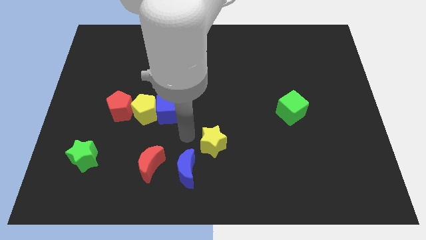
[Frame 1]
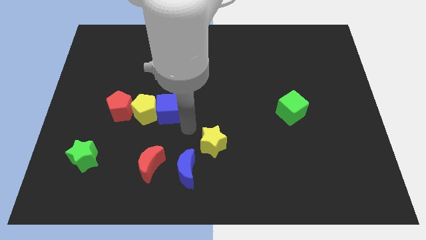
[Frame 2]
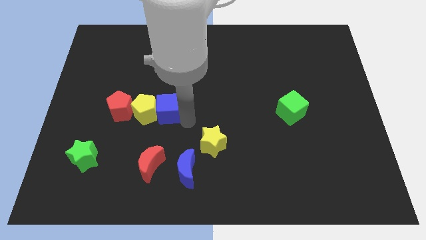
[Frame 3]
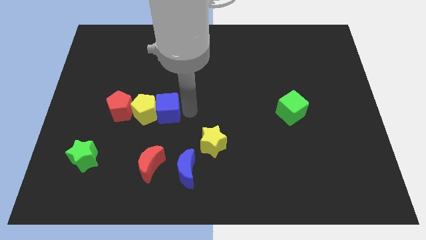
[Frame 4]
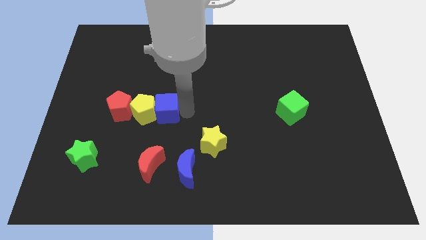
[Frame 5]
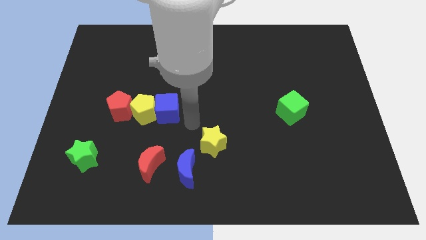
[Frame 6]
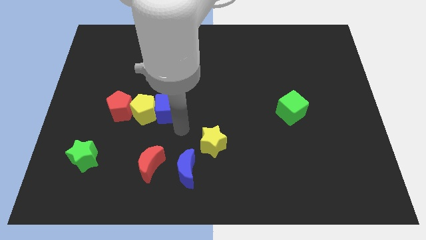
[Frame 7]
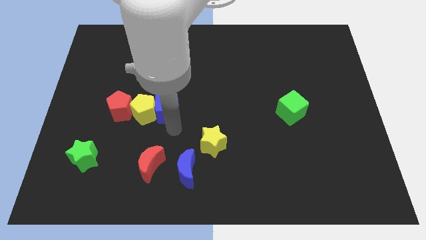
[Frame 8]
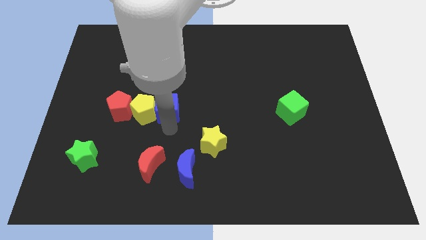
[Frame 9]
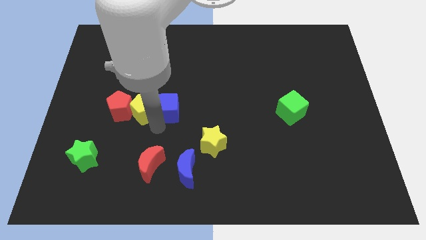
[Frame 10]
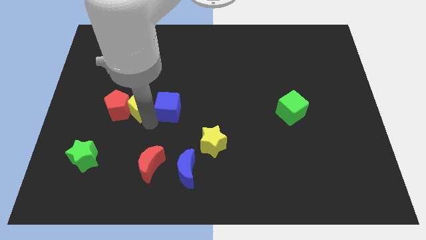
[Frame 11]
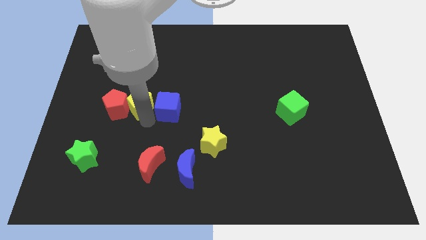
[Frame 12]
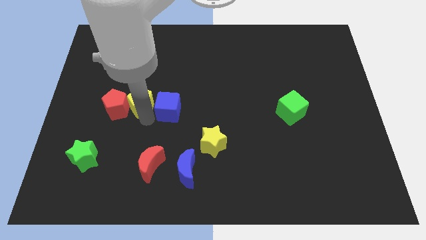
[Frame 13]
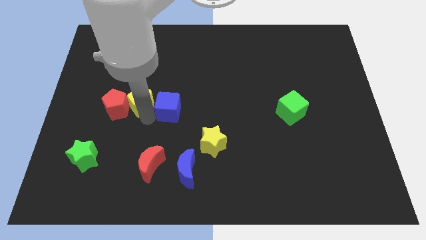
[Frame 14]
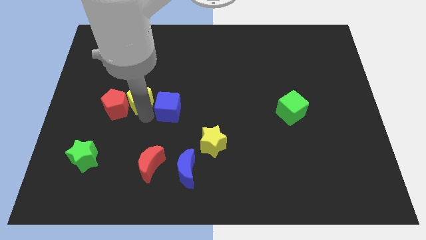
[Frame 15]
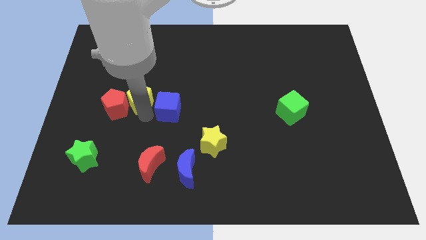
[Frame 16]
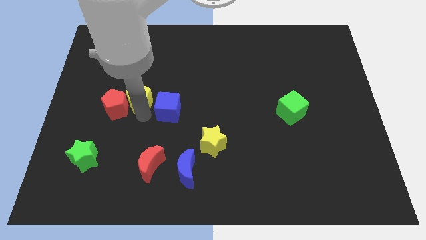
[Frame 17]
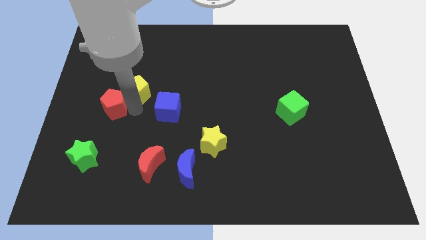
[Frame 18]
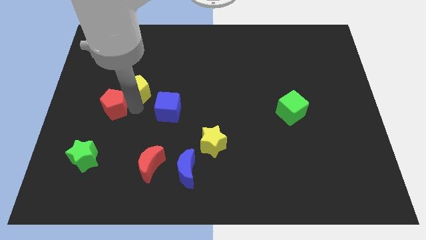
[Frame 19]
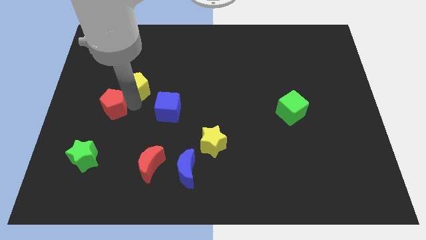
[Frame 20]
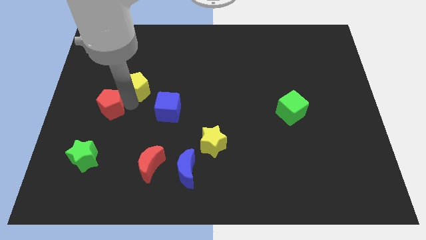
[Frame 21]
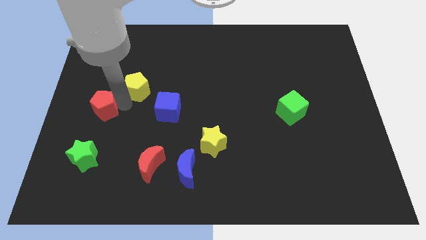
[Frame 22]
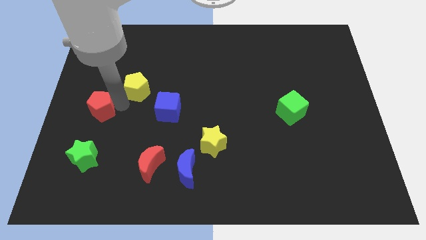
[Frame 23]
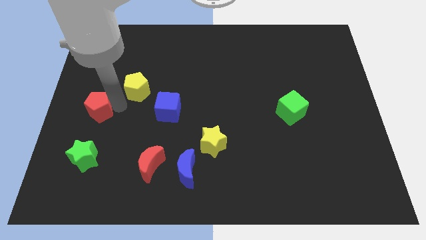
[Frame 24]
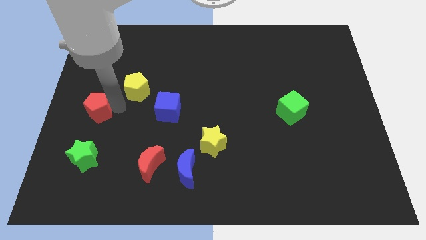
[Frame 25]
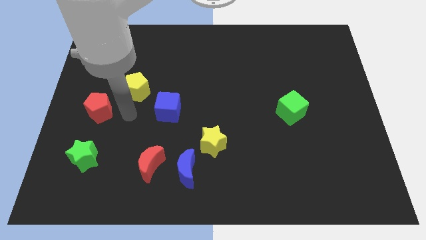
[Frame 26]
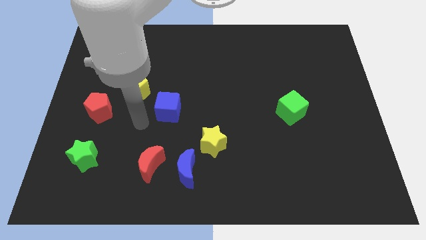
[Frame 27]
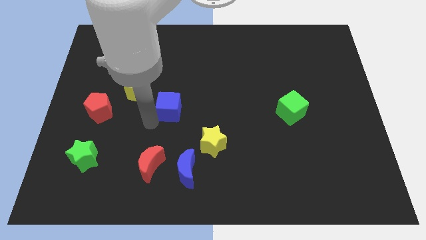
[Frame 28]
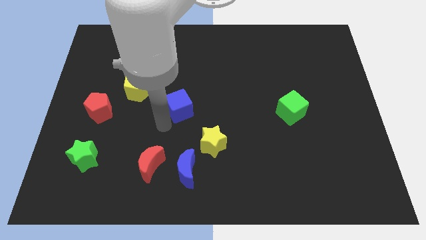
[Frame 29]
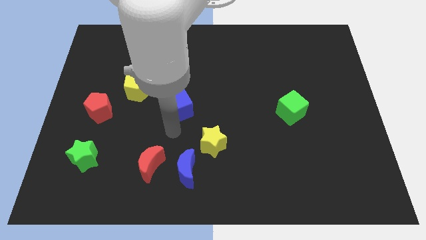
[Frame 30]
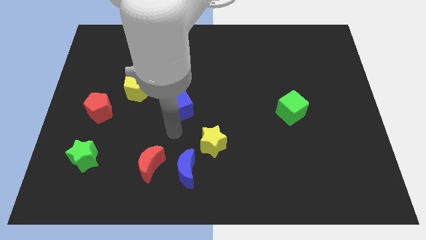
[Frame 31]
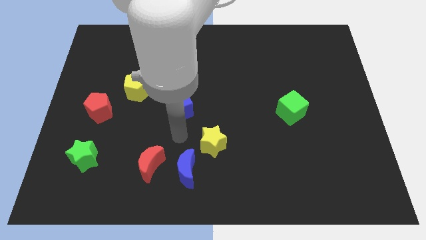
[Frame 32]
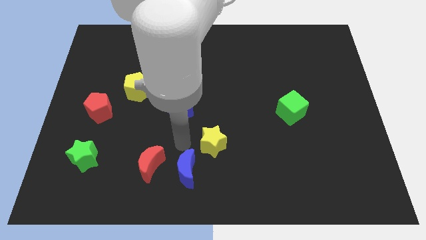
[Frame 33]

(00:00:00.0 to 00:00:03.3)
adjust the blue cube yellow pentagon and the red pentagon to form a triangle

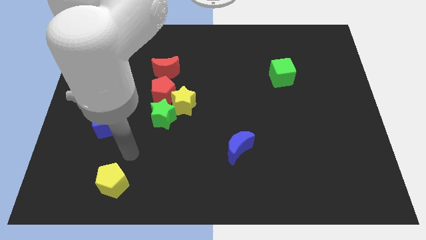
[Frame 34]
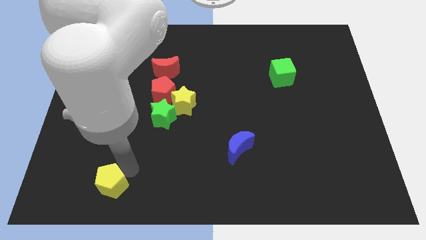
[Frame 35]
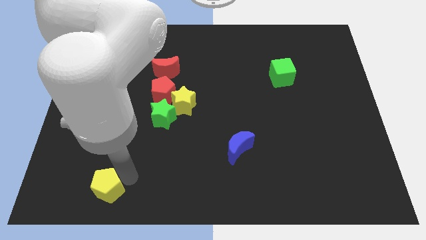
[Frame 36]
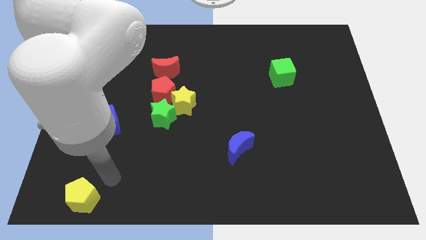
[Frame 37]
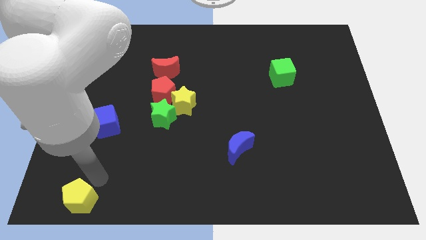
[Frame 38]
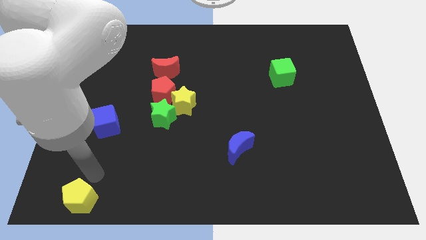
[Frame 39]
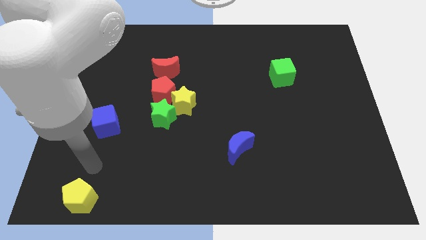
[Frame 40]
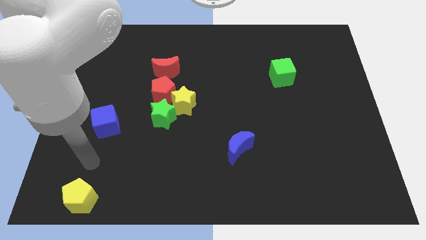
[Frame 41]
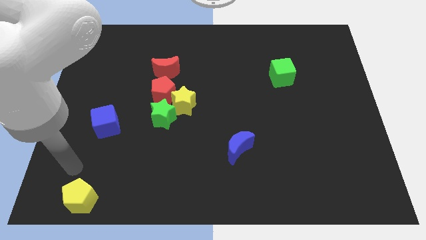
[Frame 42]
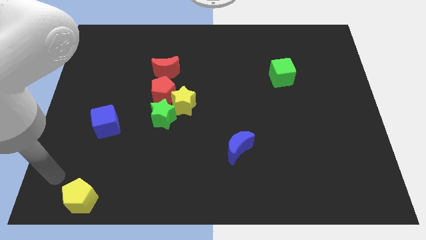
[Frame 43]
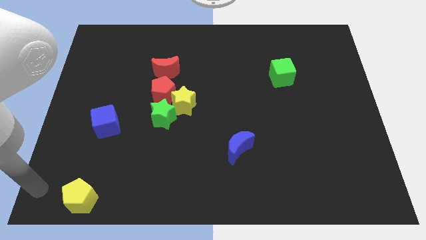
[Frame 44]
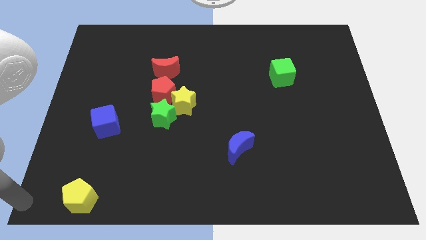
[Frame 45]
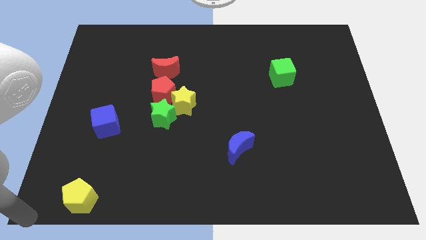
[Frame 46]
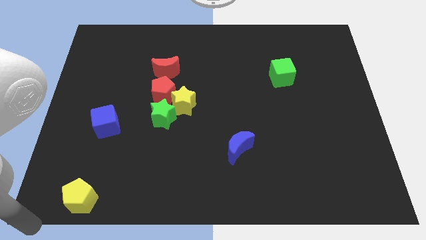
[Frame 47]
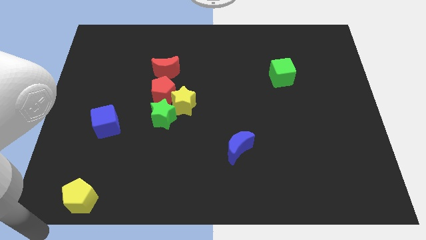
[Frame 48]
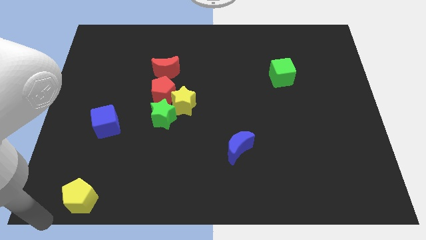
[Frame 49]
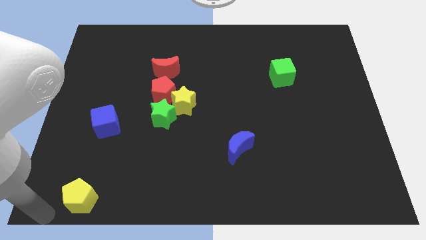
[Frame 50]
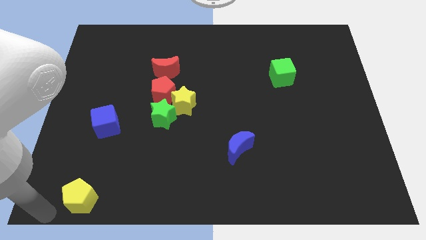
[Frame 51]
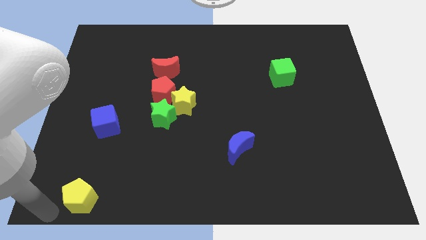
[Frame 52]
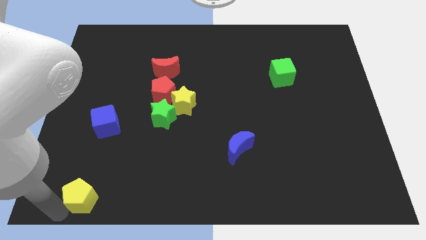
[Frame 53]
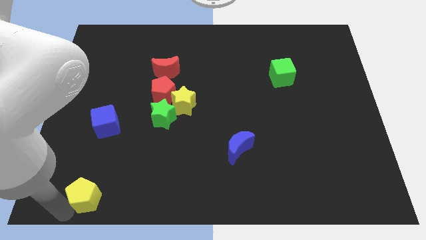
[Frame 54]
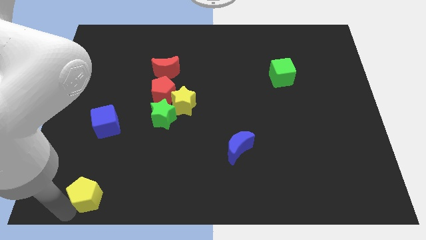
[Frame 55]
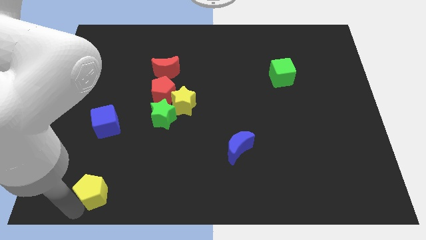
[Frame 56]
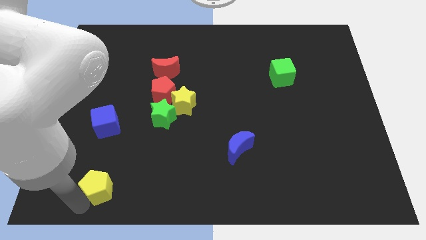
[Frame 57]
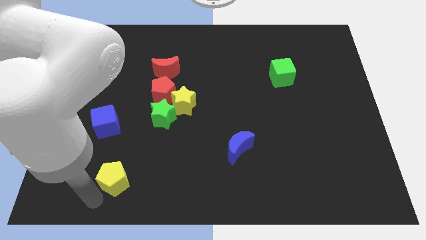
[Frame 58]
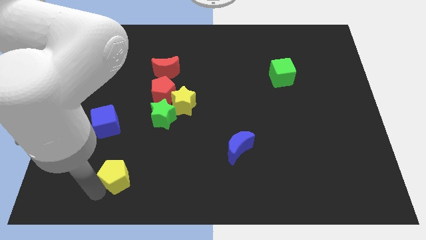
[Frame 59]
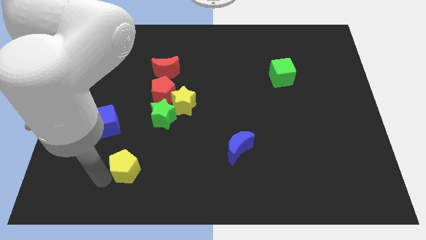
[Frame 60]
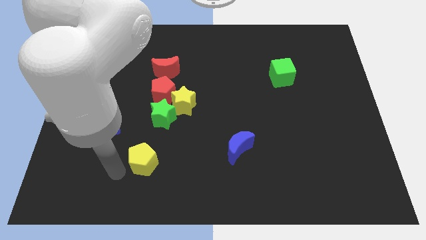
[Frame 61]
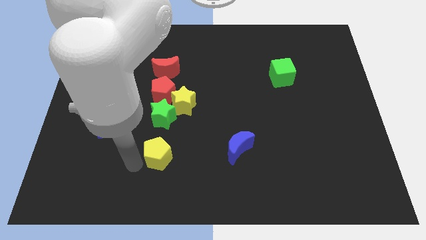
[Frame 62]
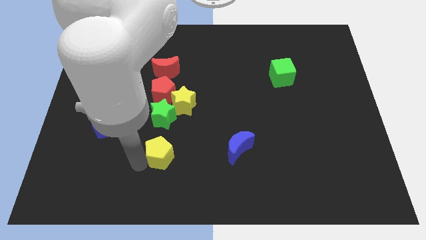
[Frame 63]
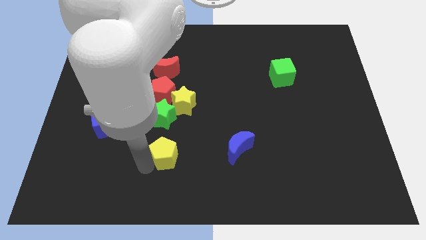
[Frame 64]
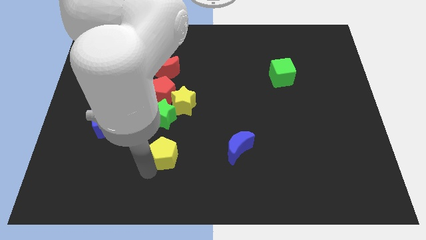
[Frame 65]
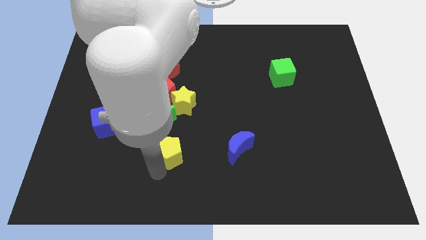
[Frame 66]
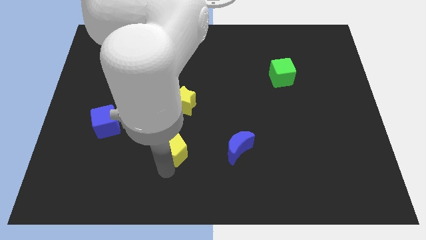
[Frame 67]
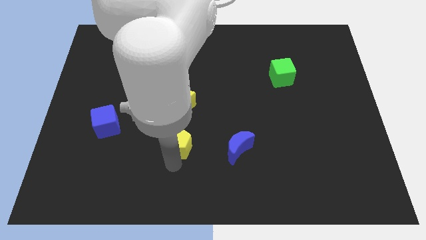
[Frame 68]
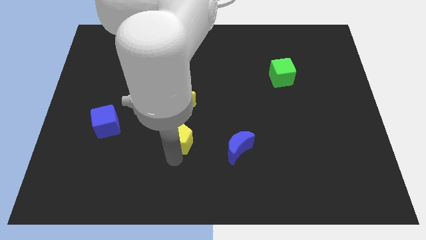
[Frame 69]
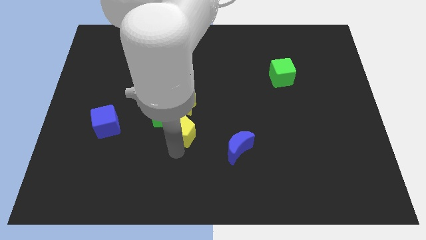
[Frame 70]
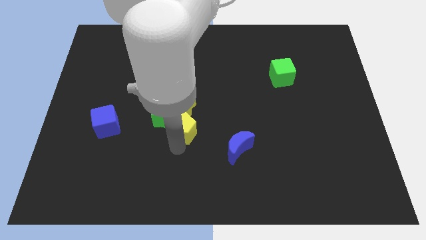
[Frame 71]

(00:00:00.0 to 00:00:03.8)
move the yellow pentagon below the yellow star

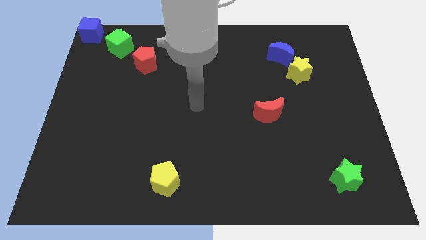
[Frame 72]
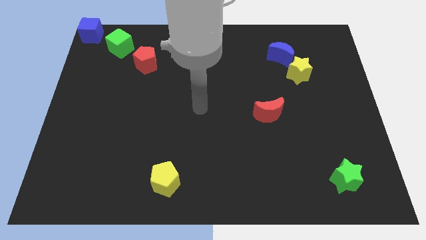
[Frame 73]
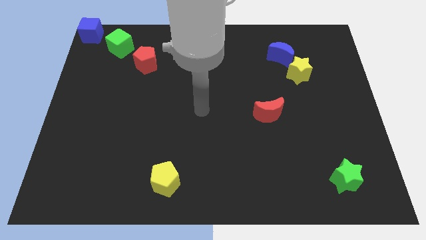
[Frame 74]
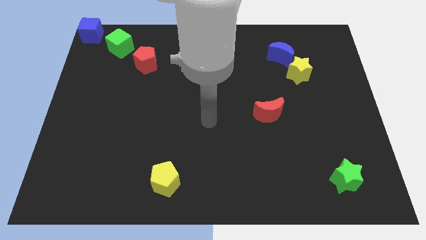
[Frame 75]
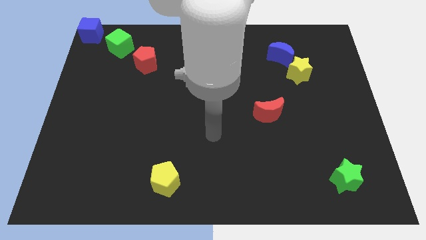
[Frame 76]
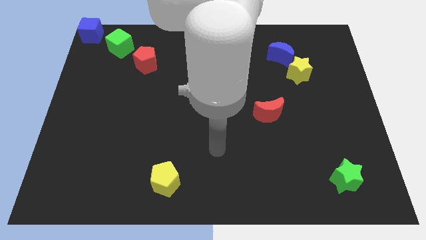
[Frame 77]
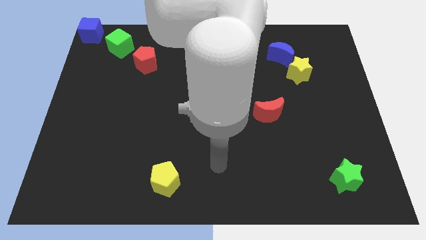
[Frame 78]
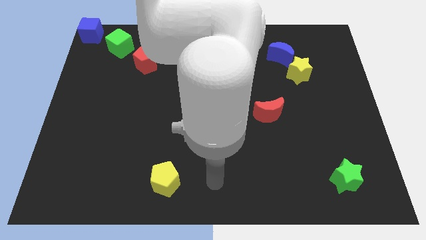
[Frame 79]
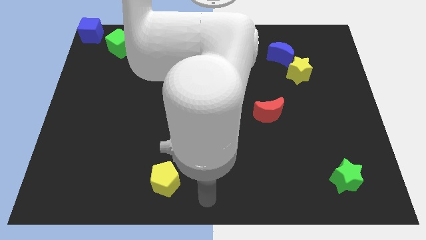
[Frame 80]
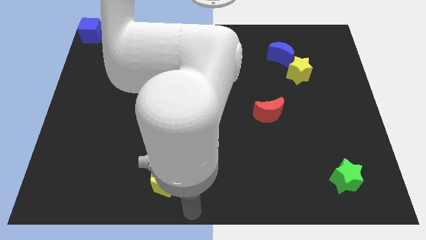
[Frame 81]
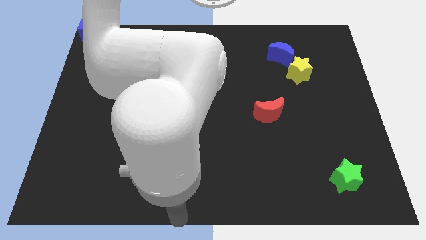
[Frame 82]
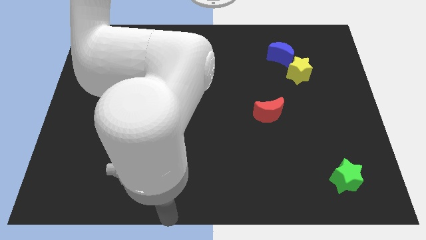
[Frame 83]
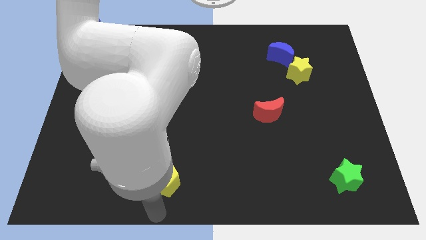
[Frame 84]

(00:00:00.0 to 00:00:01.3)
place the arm below the yellow pentagon

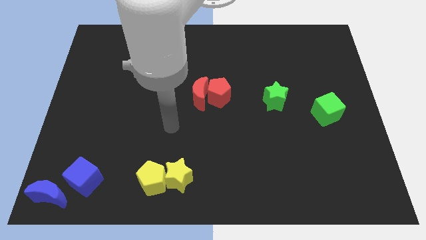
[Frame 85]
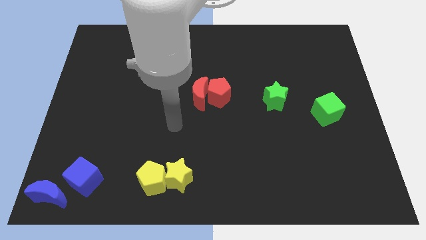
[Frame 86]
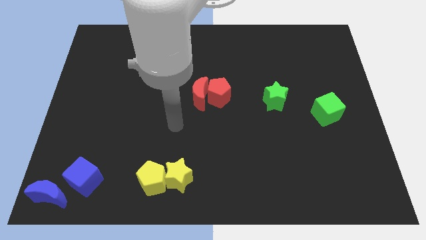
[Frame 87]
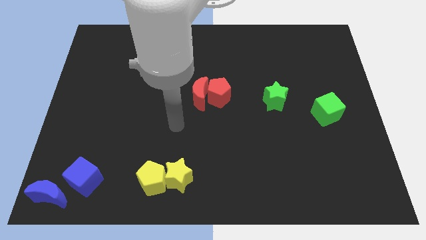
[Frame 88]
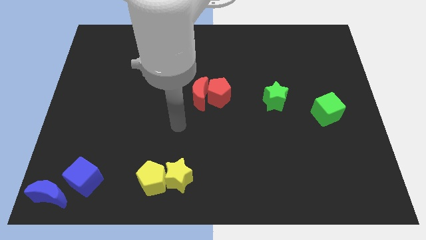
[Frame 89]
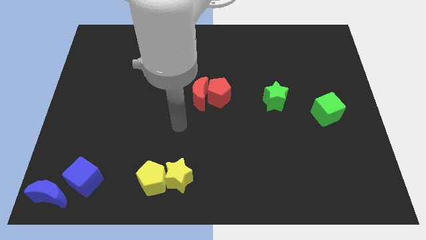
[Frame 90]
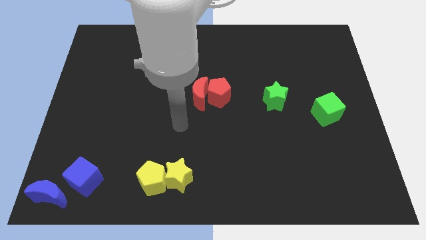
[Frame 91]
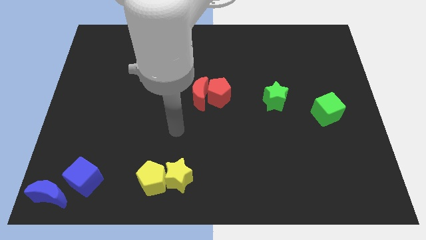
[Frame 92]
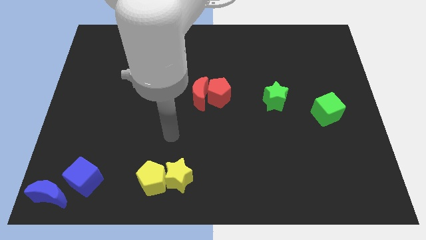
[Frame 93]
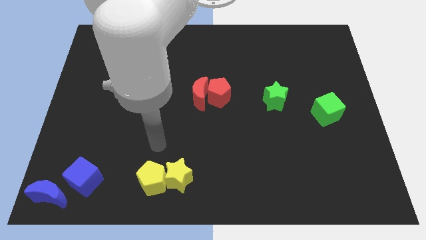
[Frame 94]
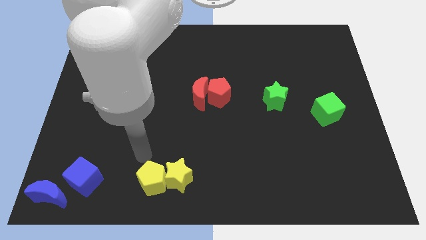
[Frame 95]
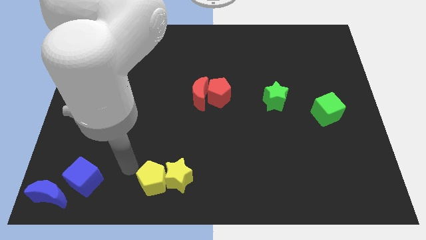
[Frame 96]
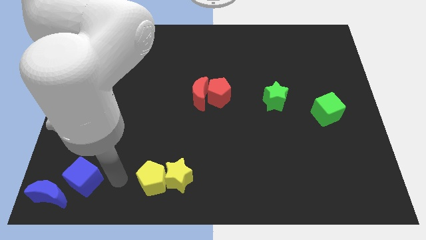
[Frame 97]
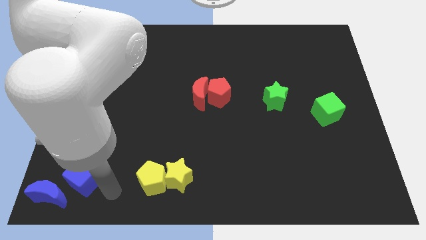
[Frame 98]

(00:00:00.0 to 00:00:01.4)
place your hand in between the blue cube and yellow pentagon
